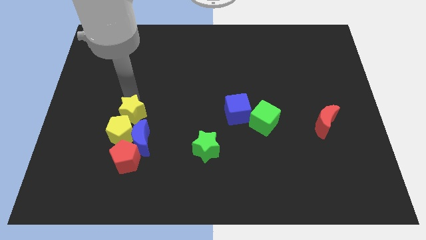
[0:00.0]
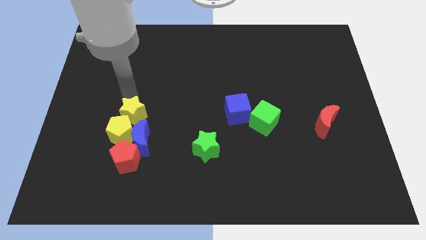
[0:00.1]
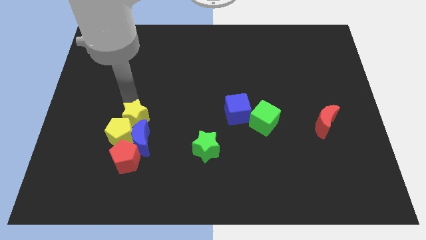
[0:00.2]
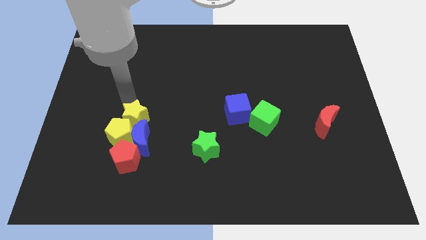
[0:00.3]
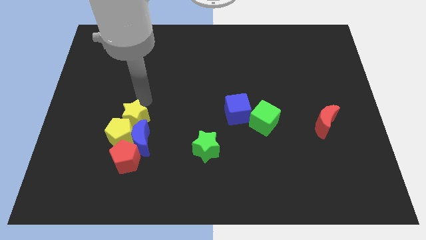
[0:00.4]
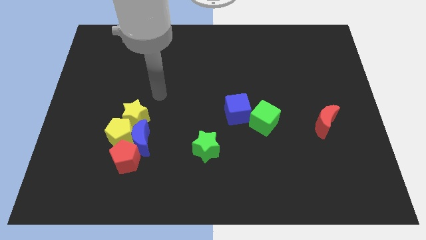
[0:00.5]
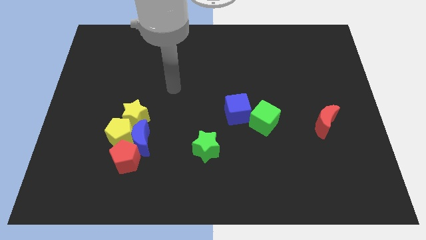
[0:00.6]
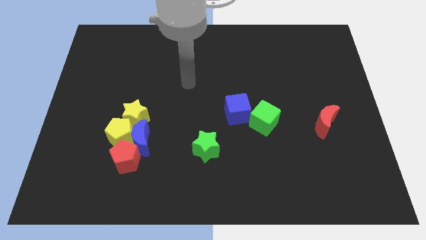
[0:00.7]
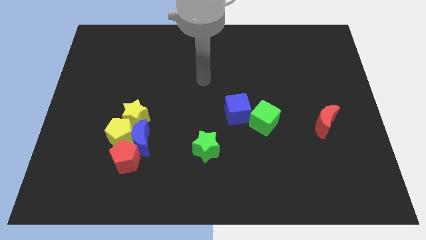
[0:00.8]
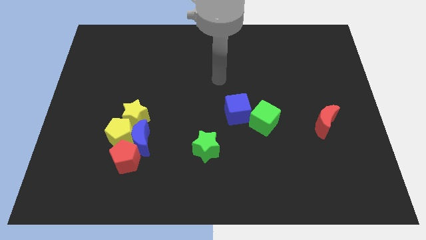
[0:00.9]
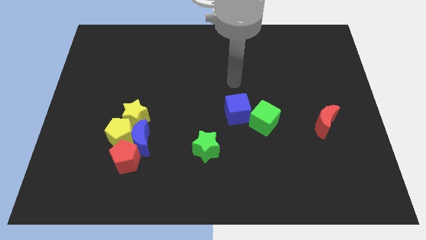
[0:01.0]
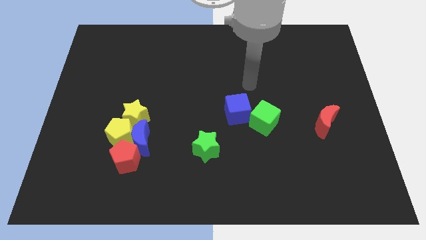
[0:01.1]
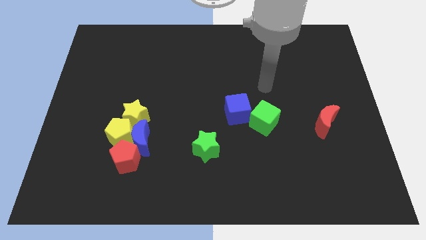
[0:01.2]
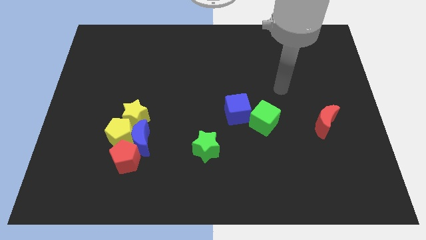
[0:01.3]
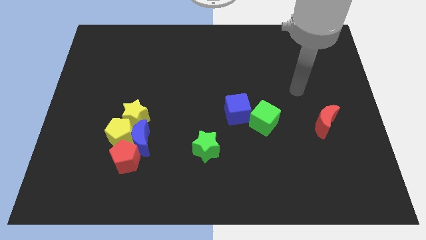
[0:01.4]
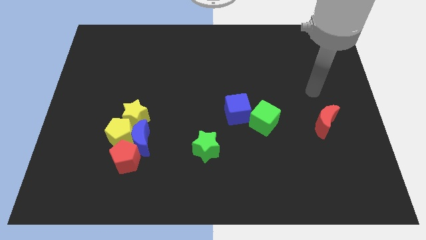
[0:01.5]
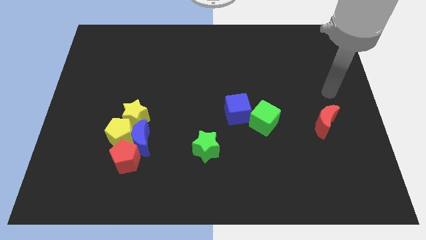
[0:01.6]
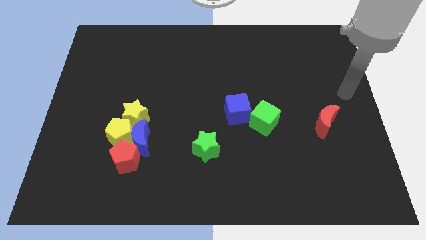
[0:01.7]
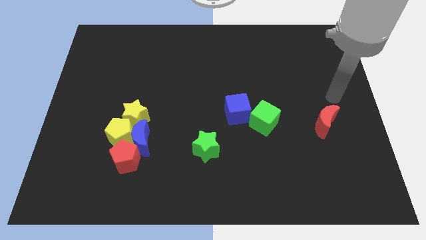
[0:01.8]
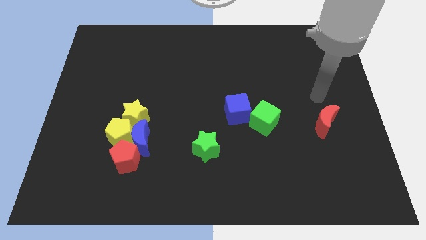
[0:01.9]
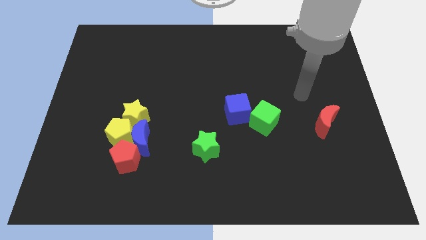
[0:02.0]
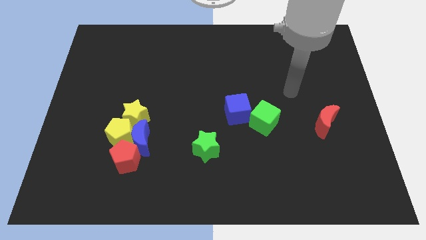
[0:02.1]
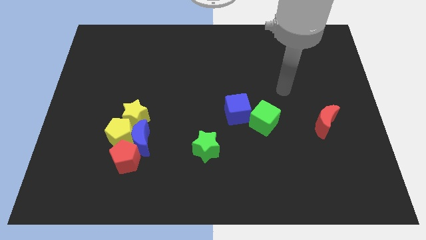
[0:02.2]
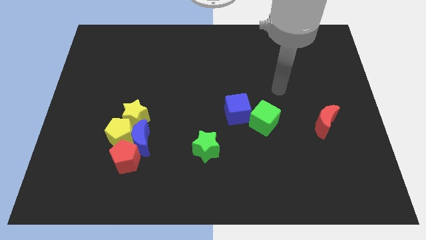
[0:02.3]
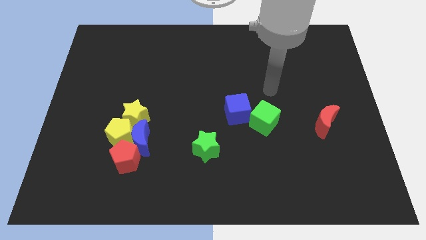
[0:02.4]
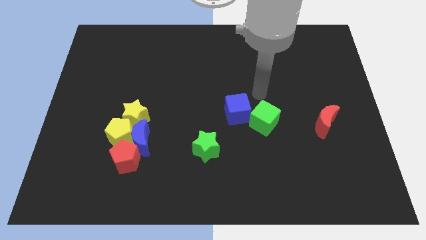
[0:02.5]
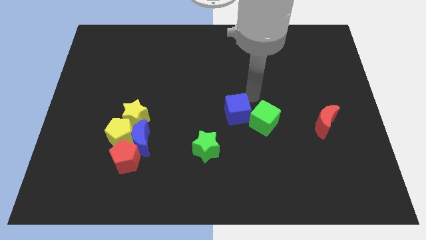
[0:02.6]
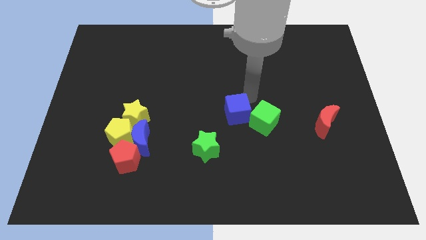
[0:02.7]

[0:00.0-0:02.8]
place your arm on the top of the blue cube

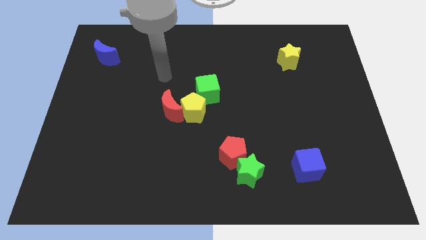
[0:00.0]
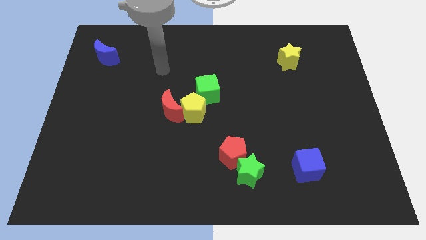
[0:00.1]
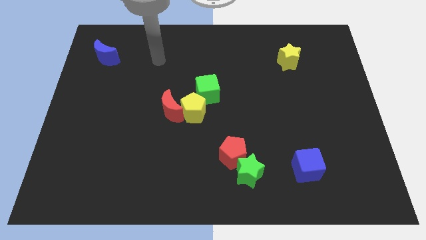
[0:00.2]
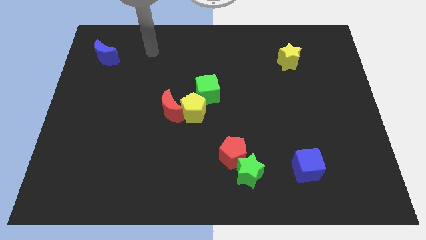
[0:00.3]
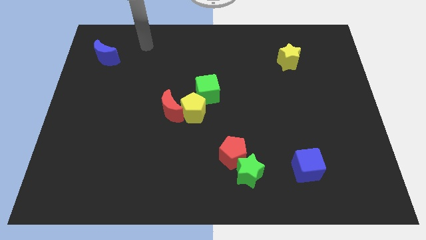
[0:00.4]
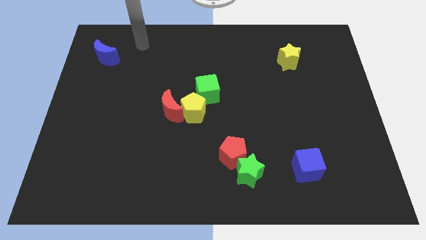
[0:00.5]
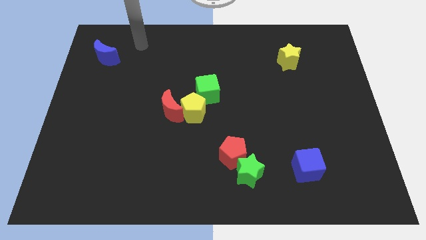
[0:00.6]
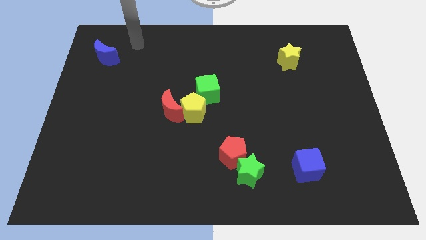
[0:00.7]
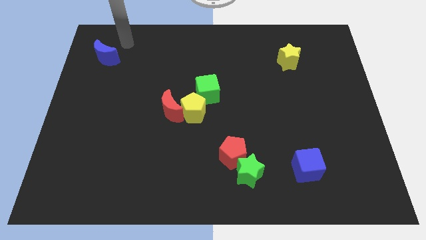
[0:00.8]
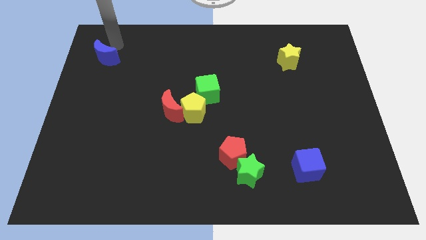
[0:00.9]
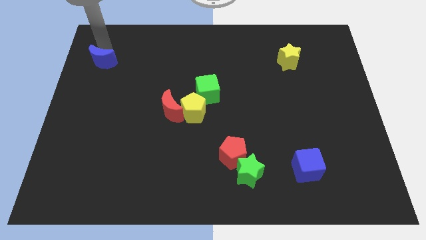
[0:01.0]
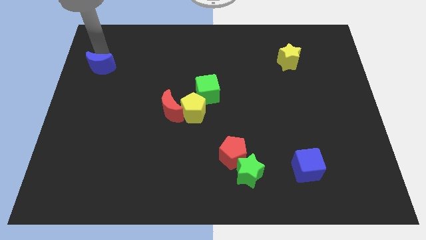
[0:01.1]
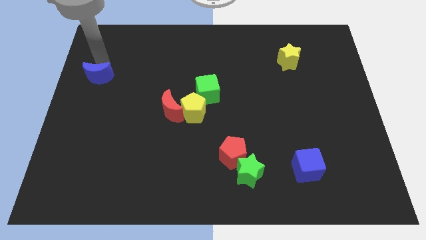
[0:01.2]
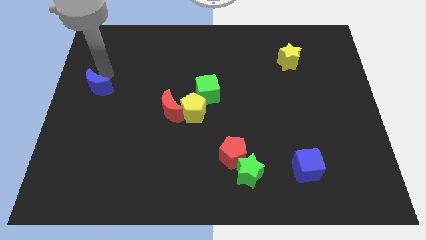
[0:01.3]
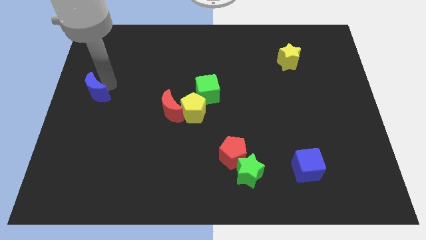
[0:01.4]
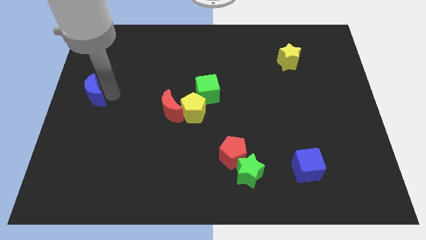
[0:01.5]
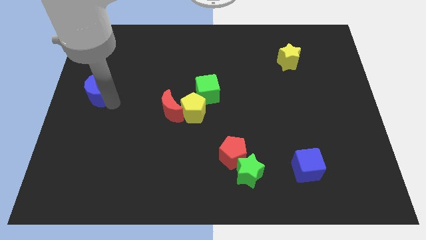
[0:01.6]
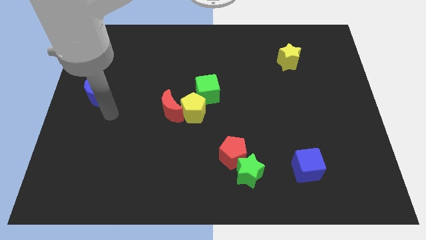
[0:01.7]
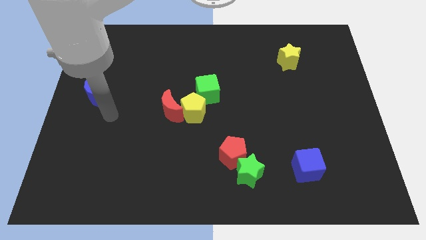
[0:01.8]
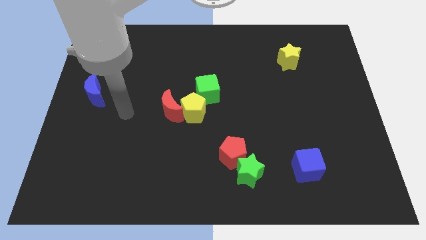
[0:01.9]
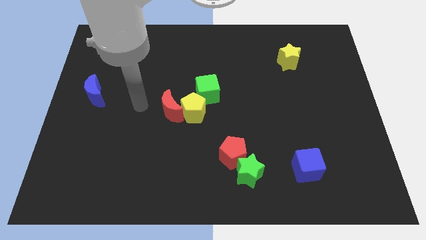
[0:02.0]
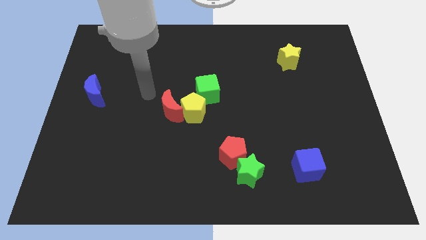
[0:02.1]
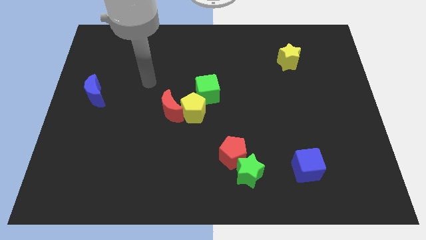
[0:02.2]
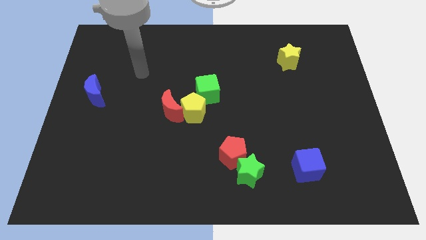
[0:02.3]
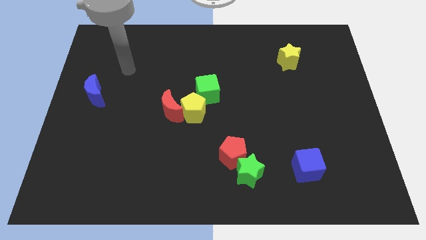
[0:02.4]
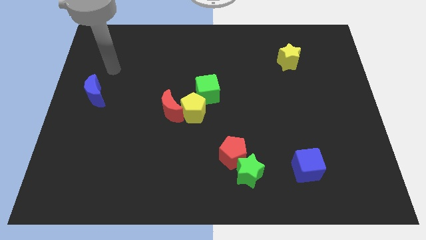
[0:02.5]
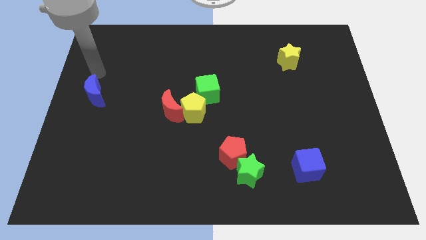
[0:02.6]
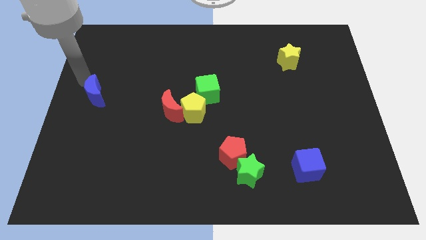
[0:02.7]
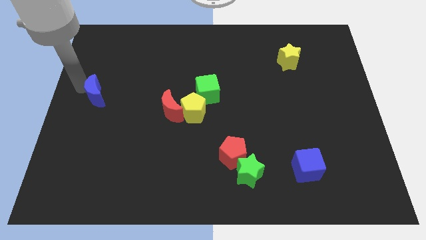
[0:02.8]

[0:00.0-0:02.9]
place the blue moon at the left center of the board

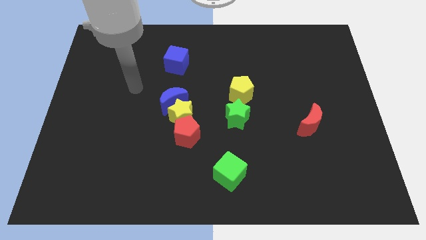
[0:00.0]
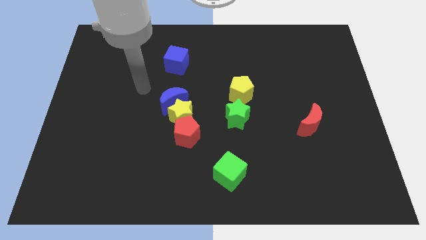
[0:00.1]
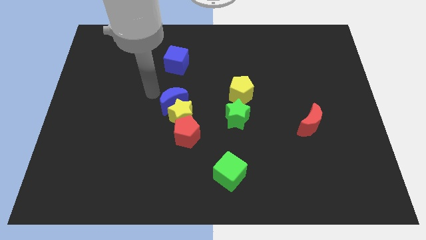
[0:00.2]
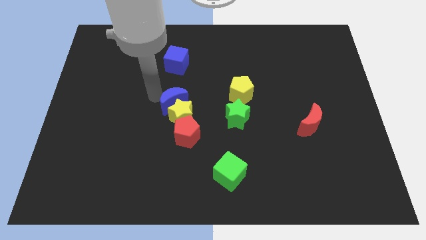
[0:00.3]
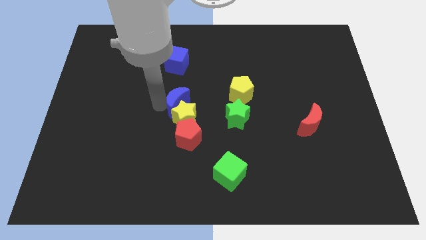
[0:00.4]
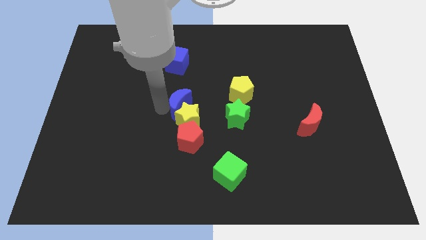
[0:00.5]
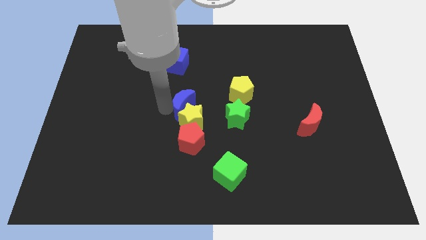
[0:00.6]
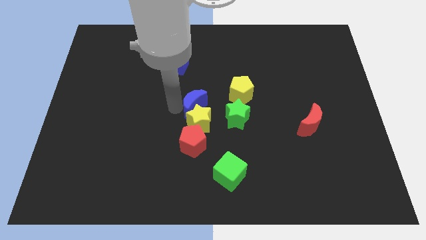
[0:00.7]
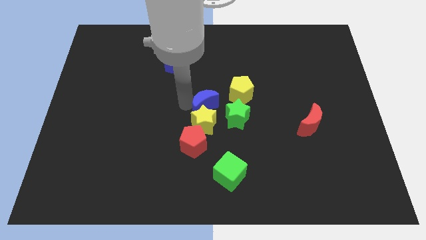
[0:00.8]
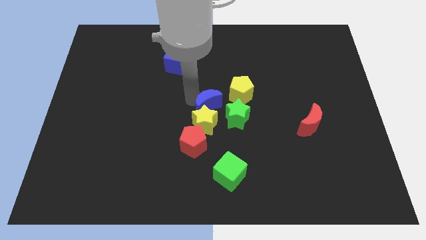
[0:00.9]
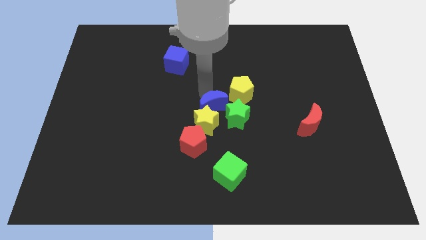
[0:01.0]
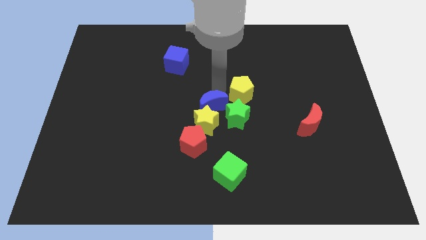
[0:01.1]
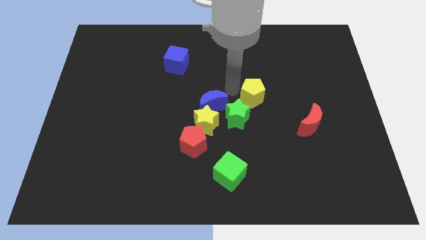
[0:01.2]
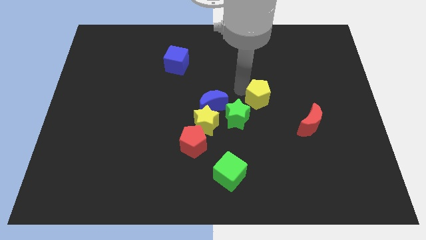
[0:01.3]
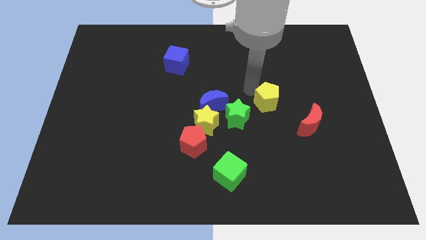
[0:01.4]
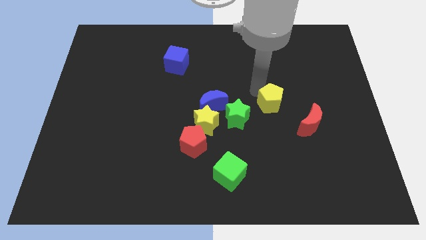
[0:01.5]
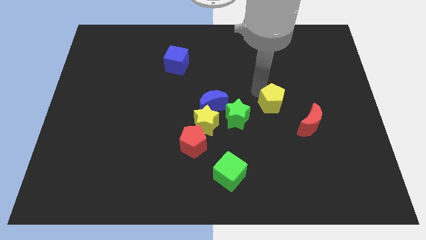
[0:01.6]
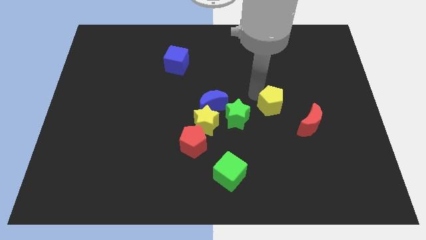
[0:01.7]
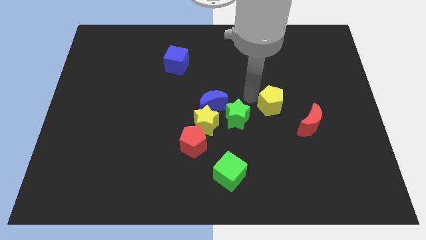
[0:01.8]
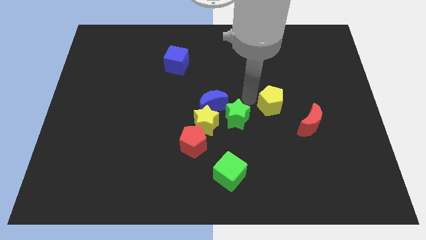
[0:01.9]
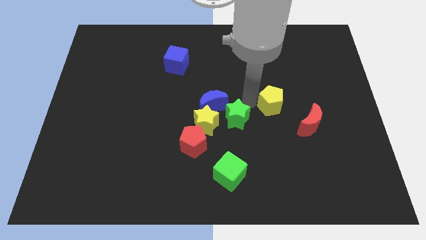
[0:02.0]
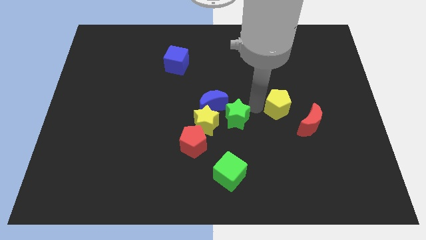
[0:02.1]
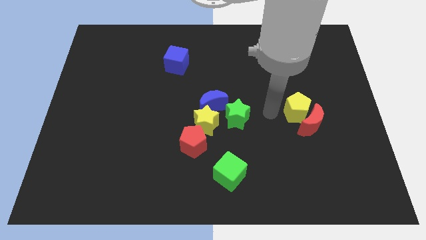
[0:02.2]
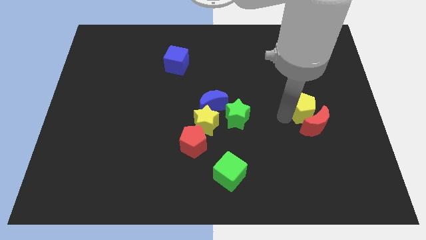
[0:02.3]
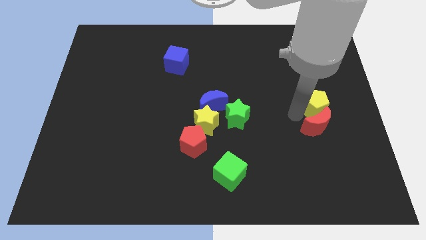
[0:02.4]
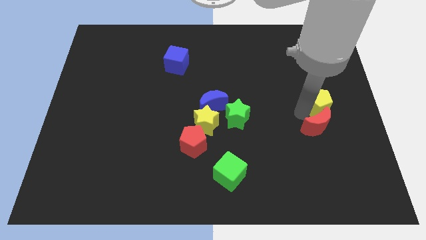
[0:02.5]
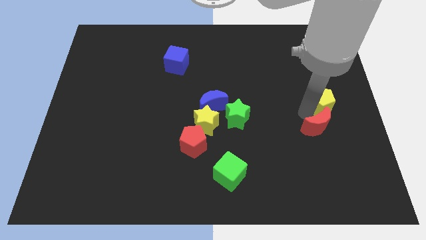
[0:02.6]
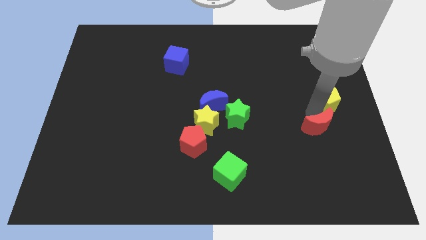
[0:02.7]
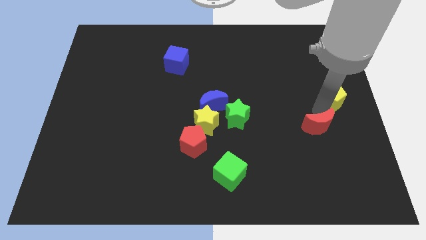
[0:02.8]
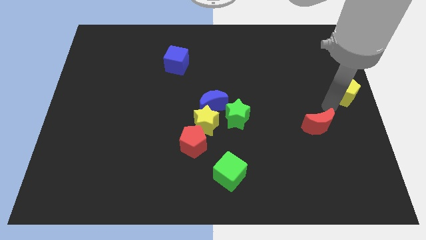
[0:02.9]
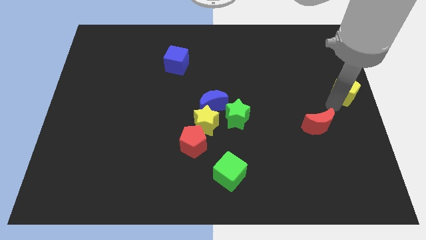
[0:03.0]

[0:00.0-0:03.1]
move the yellow pentagon to the right center of the board

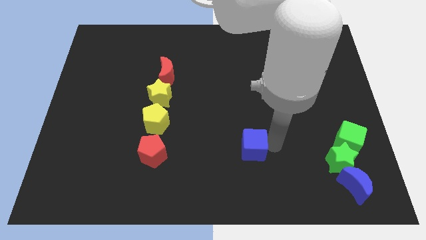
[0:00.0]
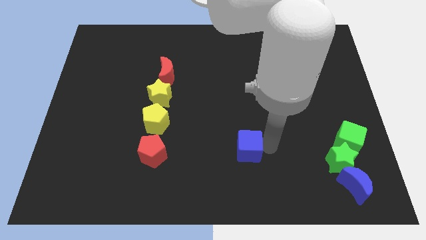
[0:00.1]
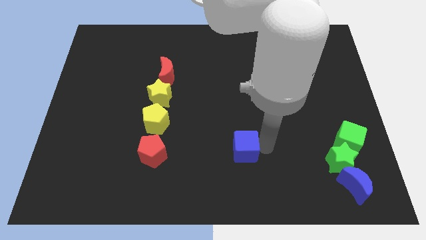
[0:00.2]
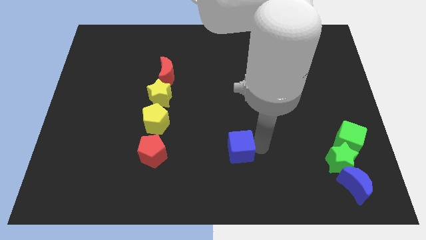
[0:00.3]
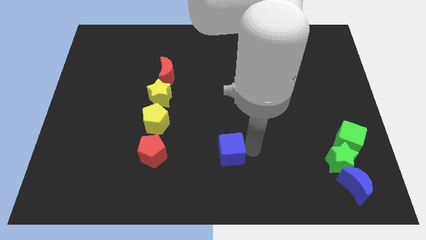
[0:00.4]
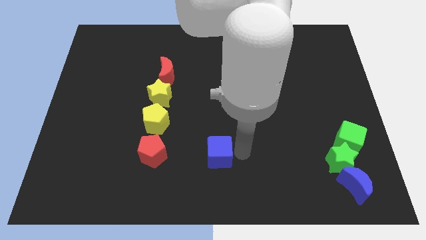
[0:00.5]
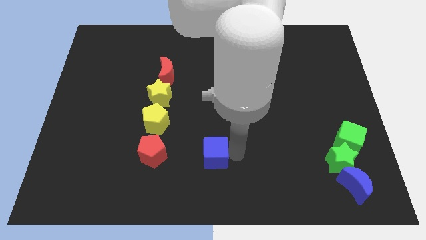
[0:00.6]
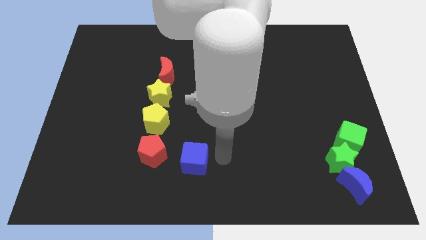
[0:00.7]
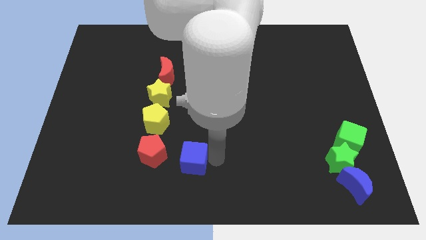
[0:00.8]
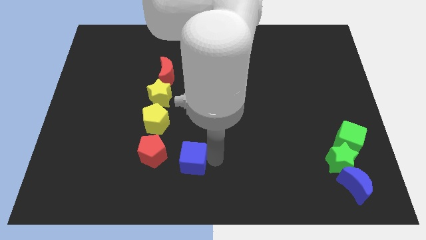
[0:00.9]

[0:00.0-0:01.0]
move the blue cube towards the red pentagon
